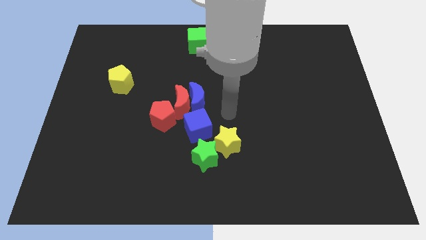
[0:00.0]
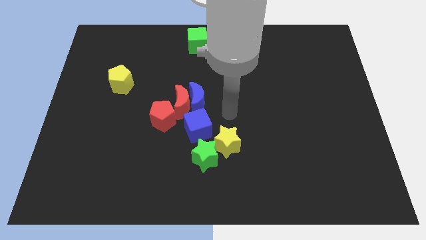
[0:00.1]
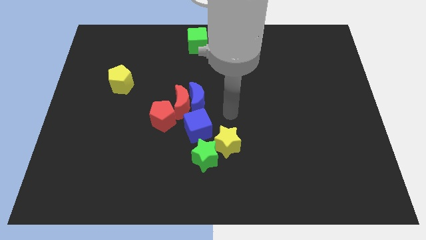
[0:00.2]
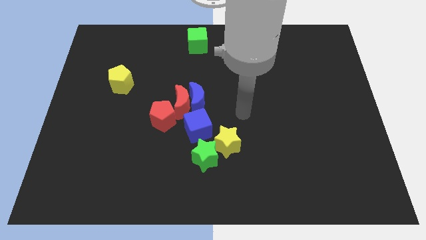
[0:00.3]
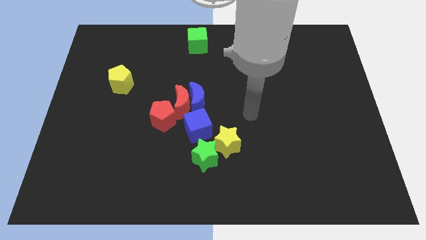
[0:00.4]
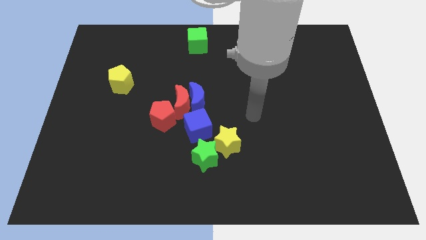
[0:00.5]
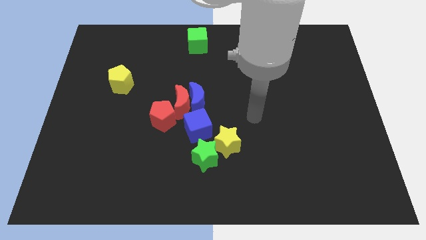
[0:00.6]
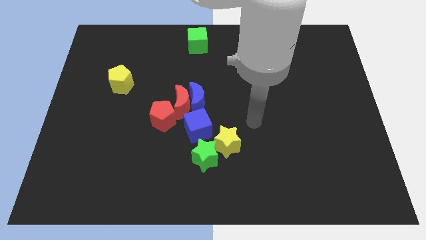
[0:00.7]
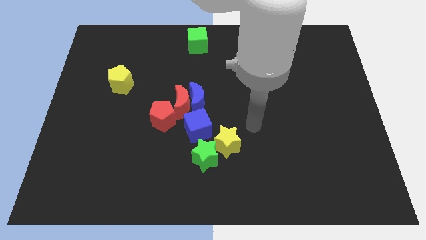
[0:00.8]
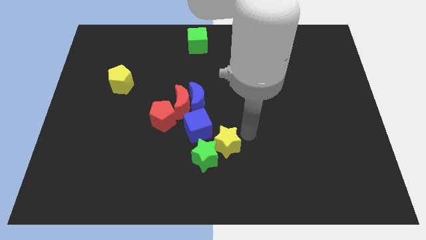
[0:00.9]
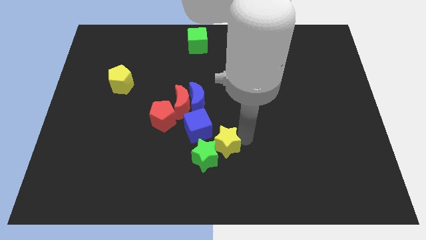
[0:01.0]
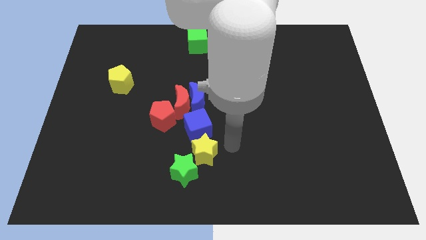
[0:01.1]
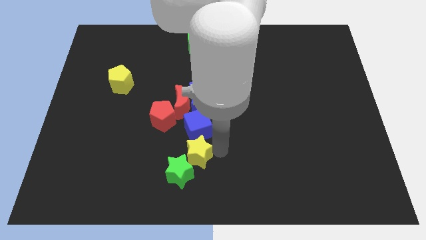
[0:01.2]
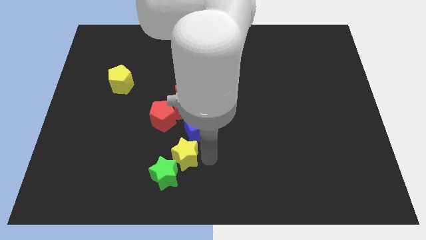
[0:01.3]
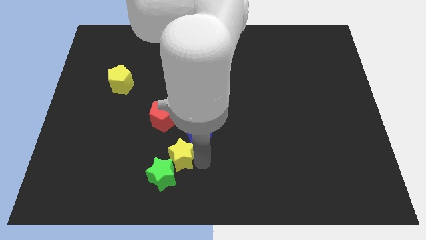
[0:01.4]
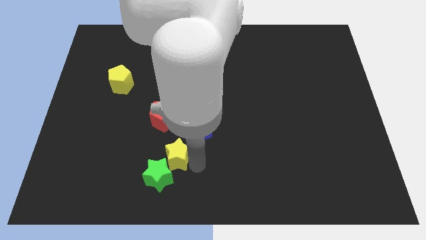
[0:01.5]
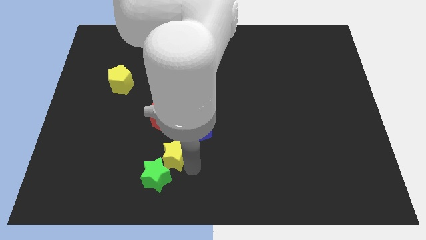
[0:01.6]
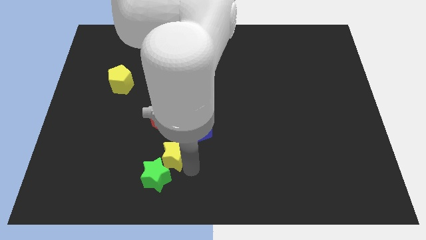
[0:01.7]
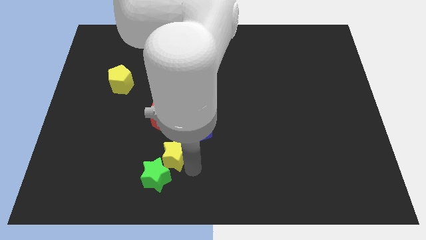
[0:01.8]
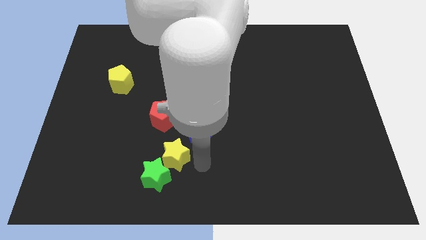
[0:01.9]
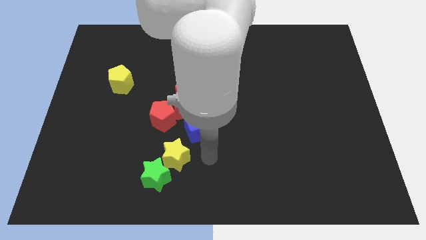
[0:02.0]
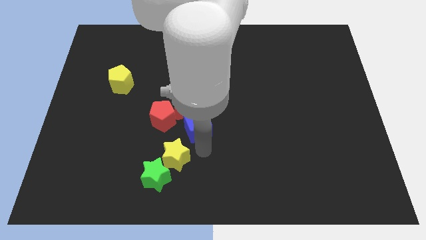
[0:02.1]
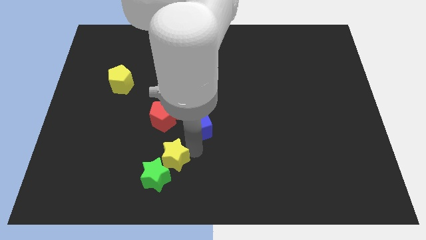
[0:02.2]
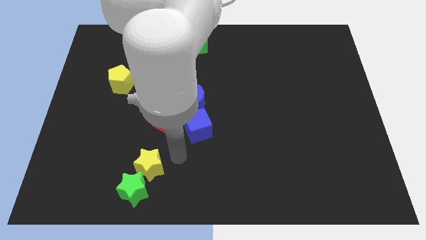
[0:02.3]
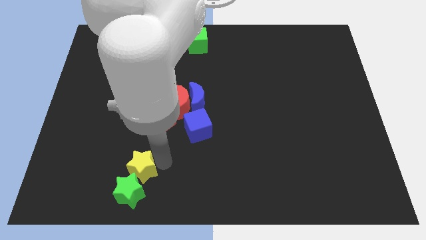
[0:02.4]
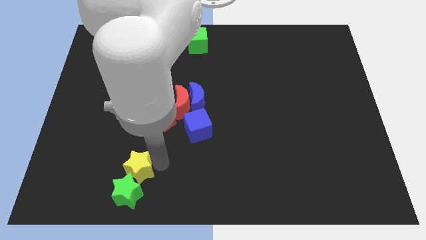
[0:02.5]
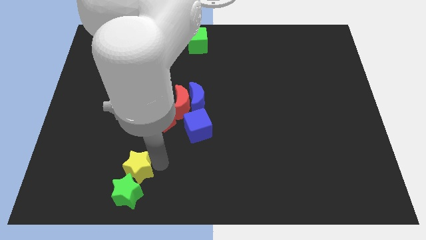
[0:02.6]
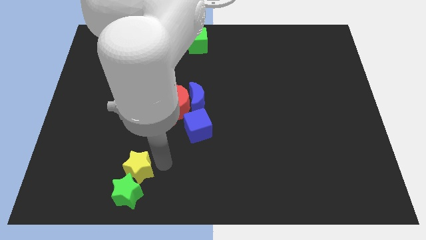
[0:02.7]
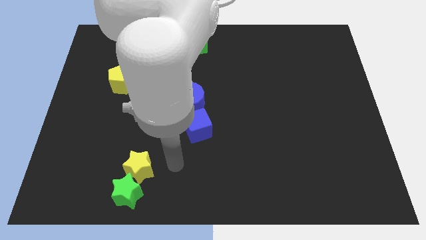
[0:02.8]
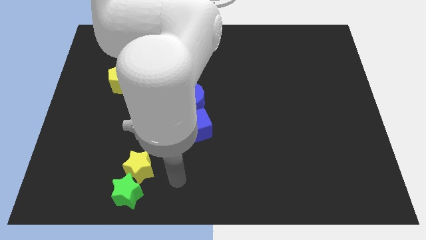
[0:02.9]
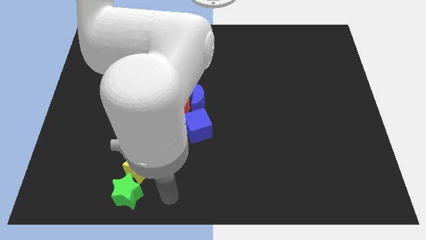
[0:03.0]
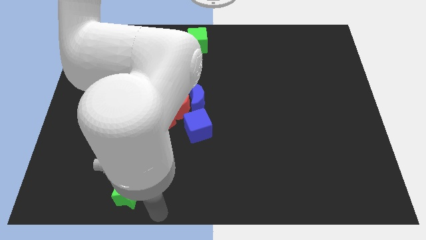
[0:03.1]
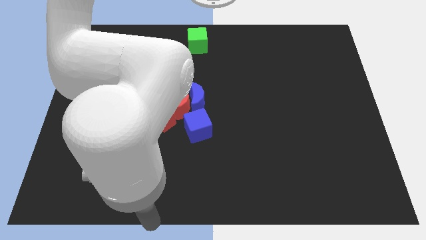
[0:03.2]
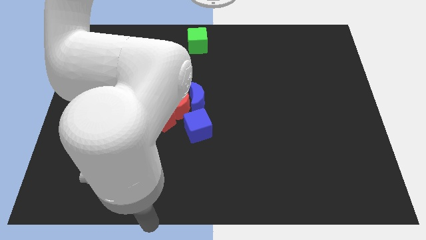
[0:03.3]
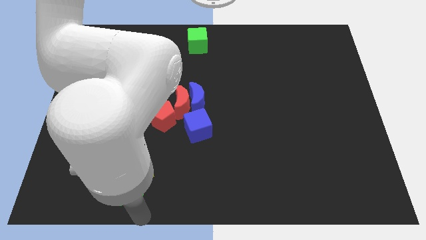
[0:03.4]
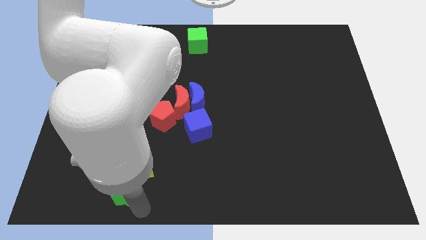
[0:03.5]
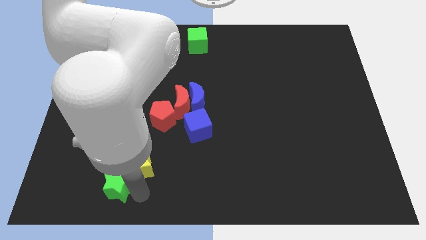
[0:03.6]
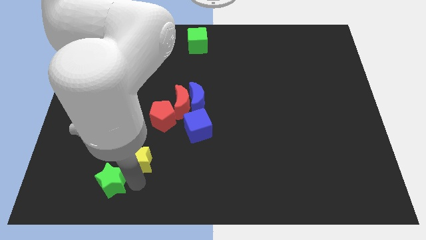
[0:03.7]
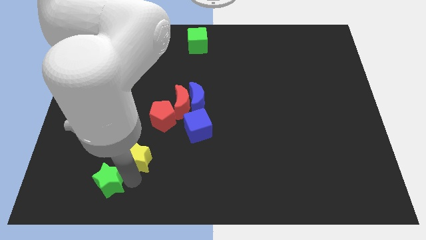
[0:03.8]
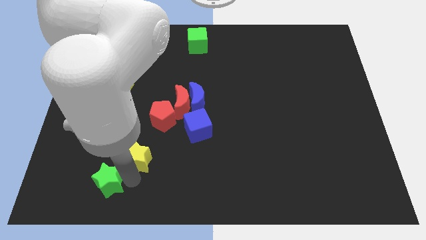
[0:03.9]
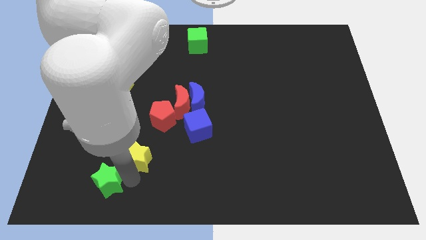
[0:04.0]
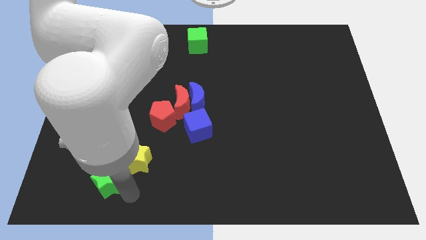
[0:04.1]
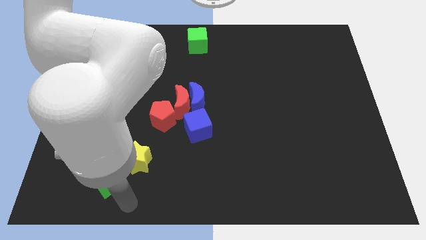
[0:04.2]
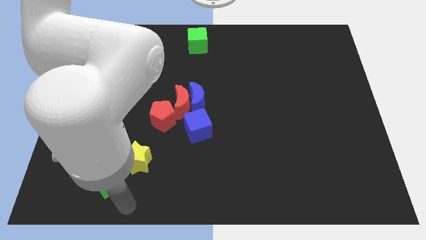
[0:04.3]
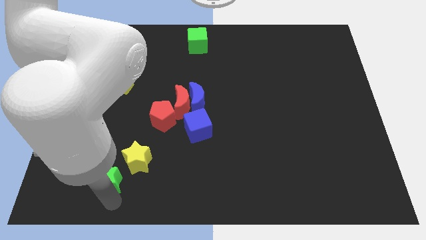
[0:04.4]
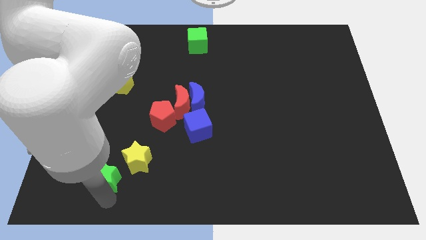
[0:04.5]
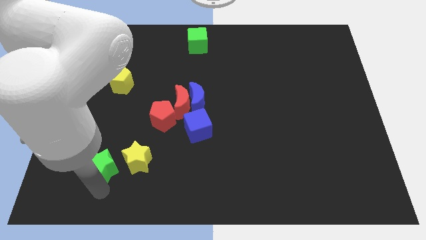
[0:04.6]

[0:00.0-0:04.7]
move stars to the bottom left of the board

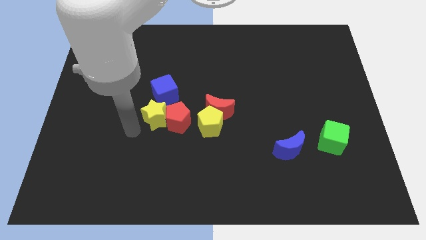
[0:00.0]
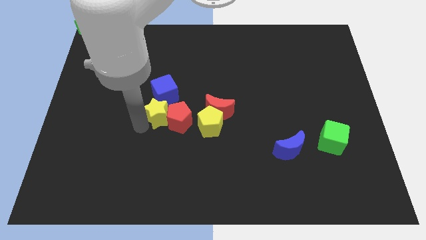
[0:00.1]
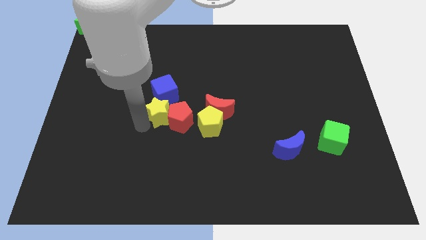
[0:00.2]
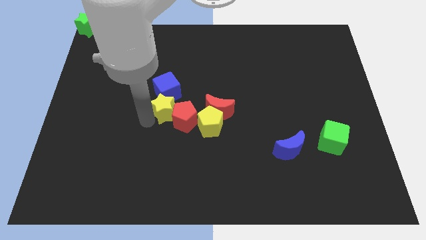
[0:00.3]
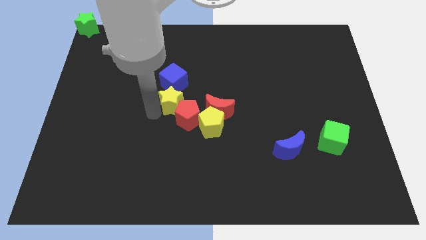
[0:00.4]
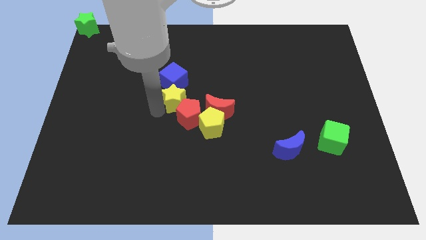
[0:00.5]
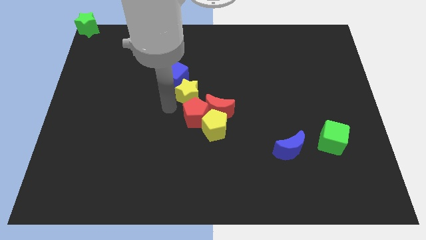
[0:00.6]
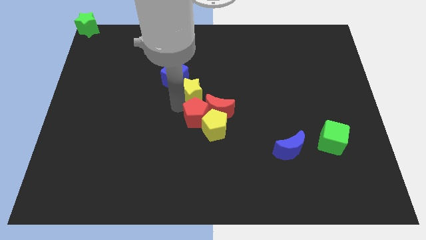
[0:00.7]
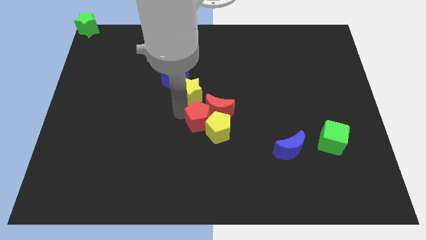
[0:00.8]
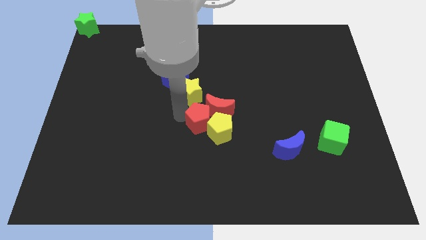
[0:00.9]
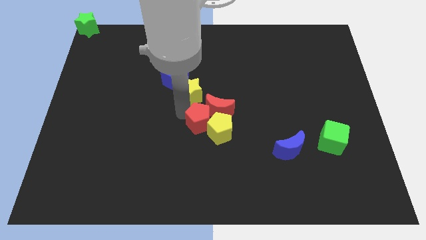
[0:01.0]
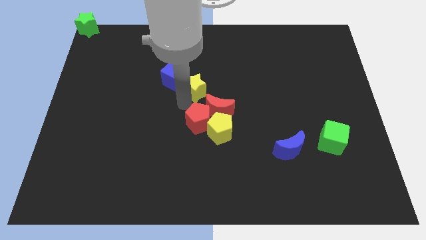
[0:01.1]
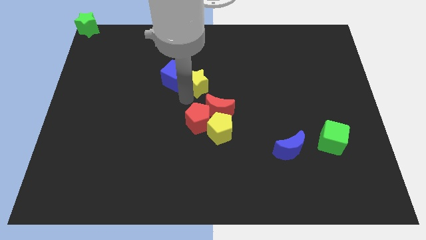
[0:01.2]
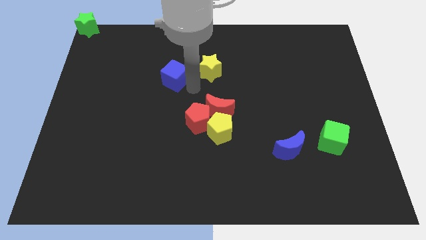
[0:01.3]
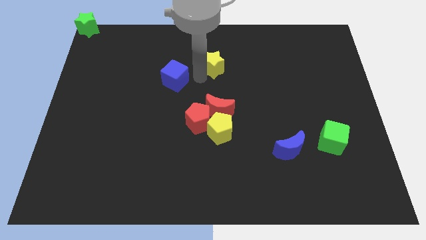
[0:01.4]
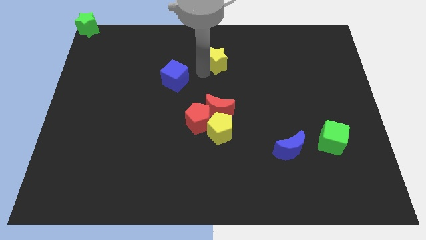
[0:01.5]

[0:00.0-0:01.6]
separate the yellow star with the blue cube and red pentagon

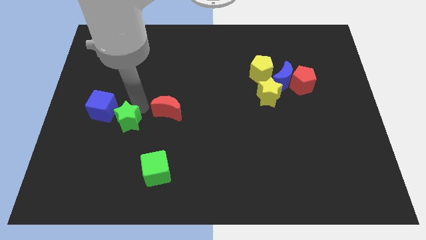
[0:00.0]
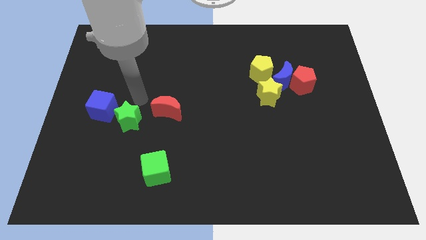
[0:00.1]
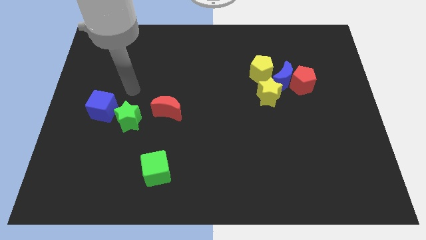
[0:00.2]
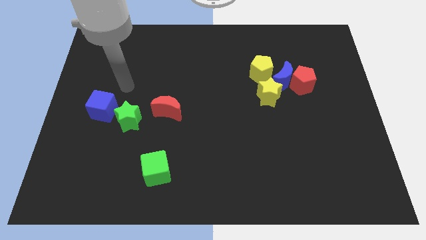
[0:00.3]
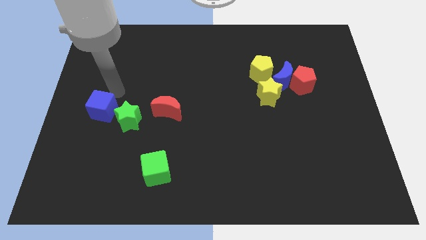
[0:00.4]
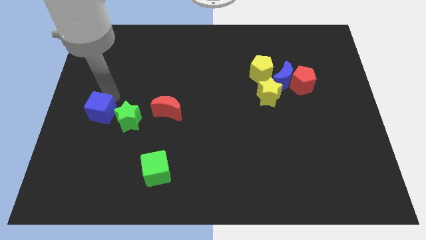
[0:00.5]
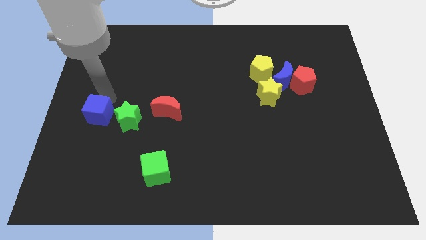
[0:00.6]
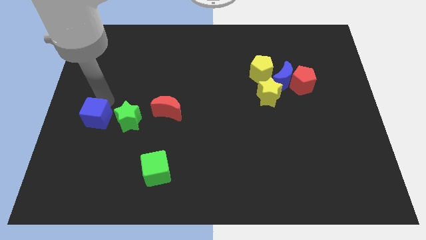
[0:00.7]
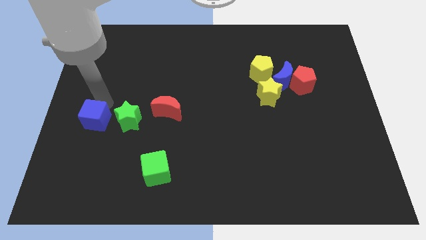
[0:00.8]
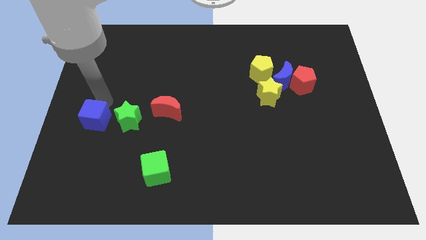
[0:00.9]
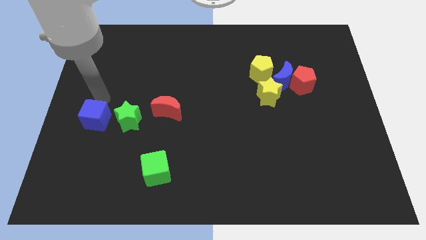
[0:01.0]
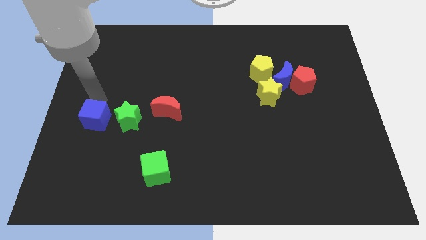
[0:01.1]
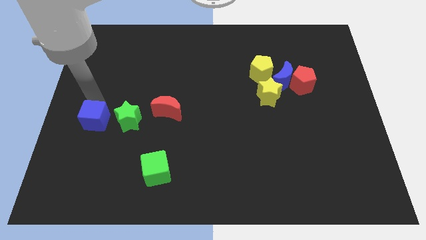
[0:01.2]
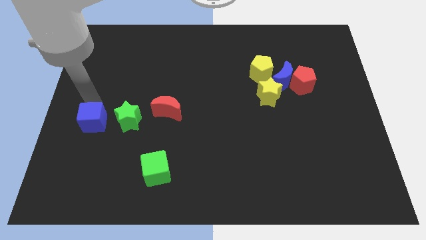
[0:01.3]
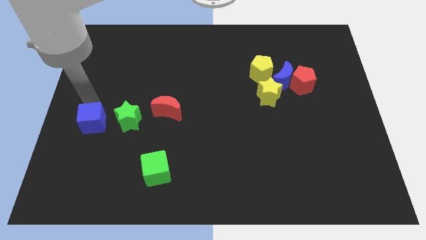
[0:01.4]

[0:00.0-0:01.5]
move the blue cube slightly to the bottom

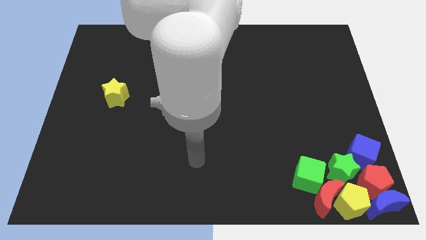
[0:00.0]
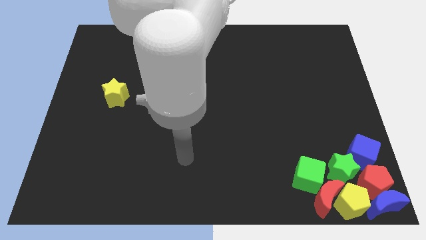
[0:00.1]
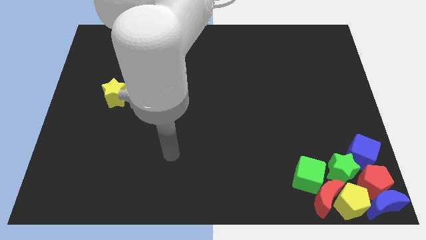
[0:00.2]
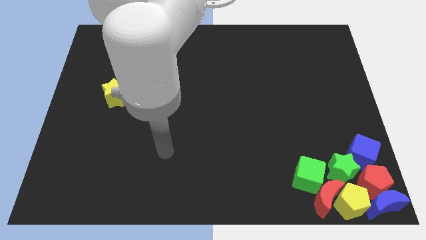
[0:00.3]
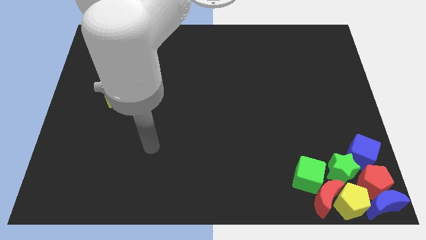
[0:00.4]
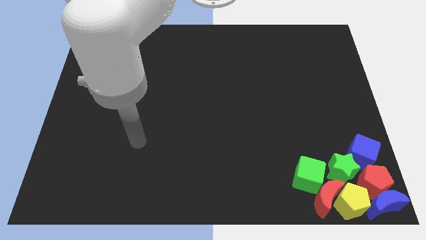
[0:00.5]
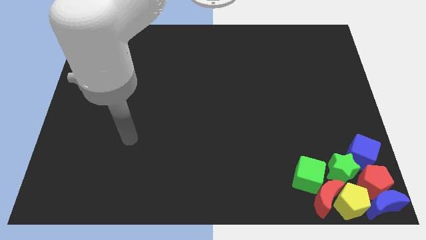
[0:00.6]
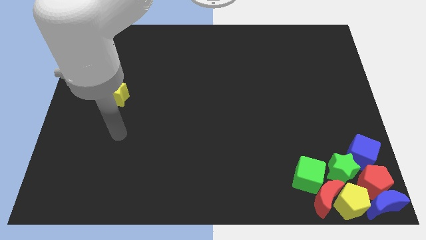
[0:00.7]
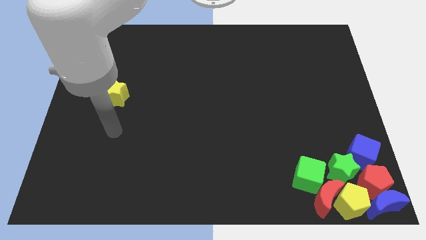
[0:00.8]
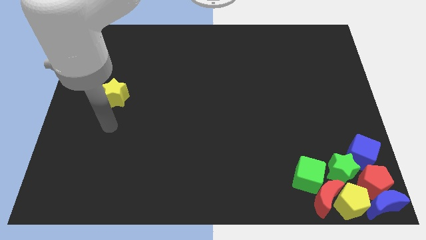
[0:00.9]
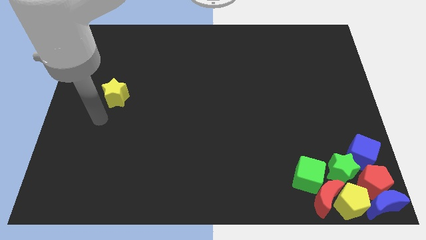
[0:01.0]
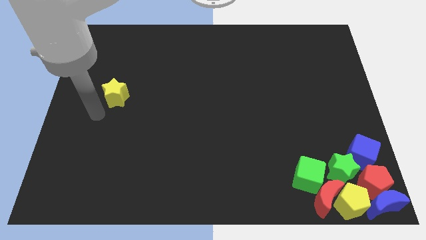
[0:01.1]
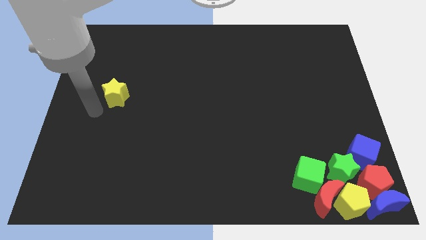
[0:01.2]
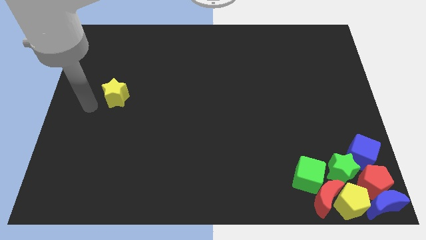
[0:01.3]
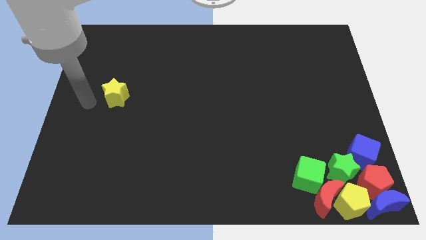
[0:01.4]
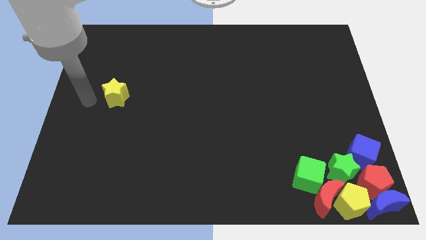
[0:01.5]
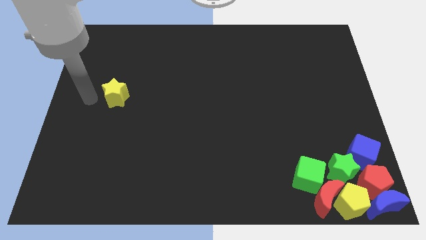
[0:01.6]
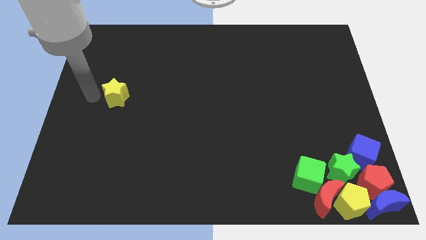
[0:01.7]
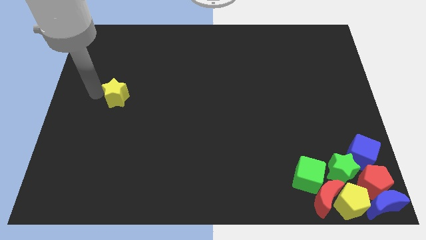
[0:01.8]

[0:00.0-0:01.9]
move your arm into the yellow star
